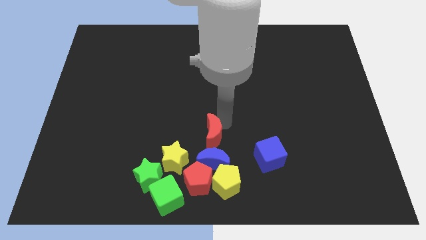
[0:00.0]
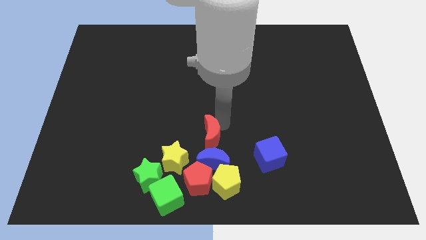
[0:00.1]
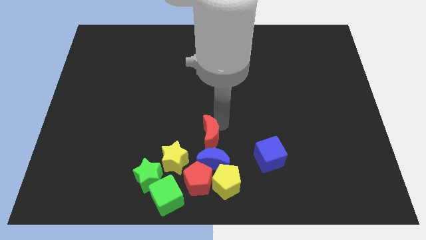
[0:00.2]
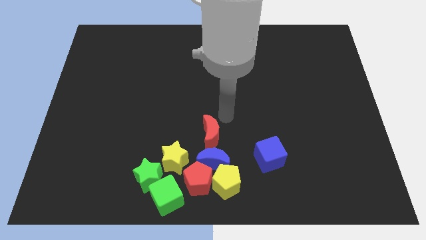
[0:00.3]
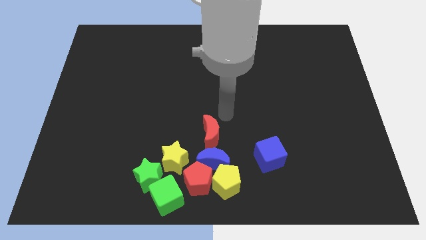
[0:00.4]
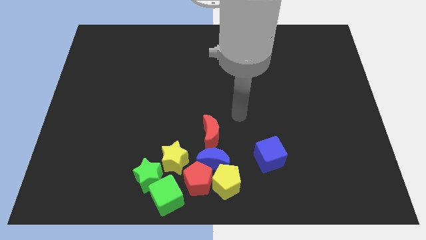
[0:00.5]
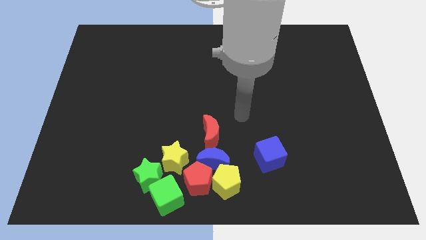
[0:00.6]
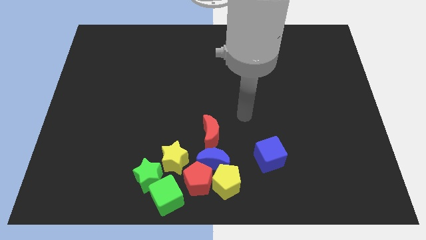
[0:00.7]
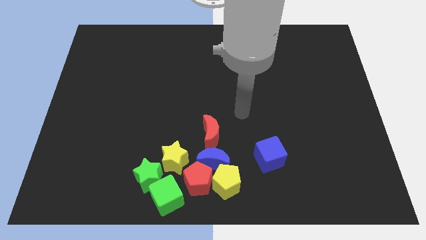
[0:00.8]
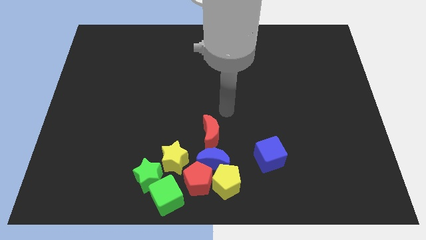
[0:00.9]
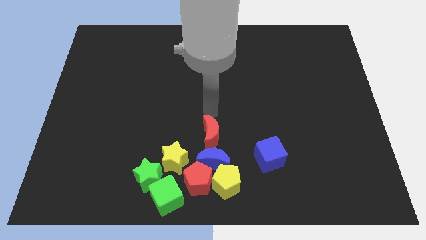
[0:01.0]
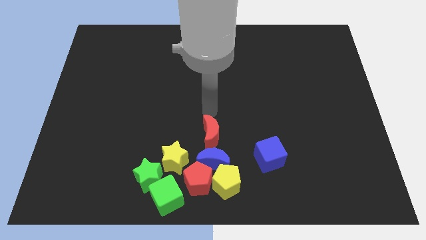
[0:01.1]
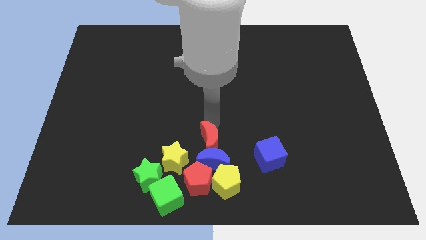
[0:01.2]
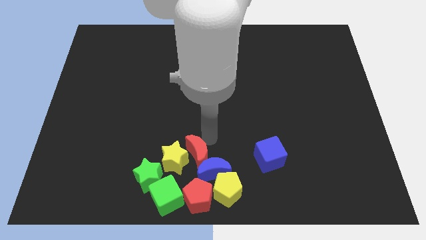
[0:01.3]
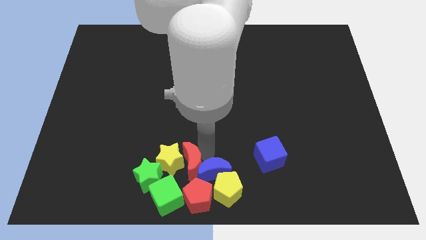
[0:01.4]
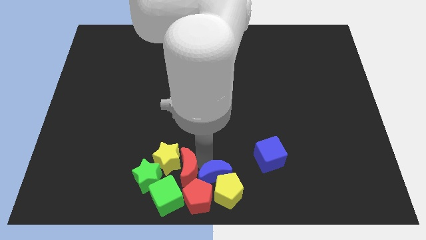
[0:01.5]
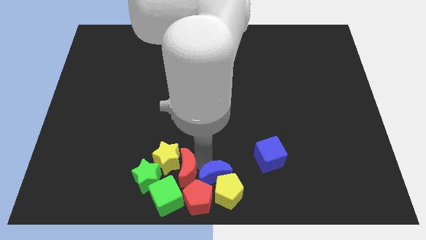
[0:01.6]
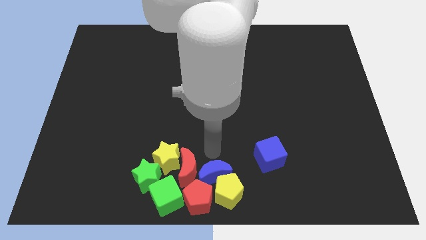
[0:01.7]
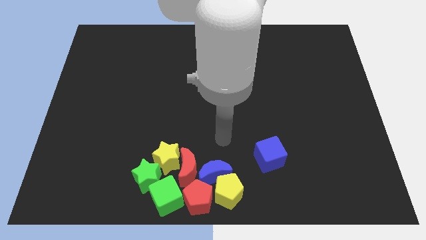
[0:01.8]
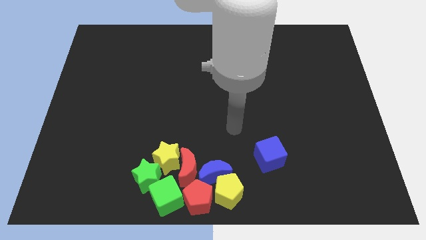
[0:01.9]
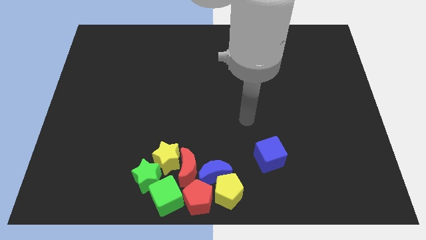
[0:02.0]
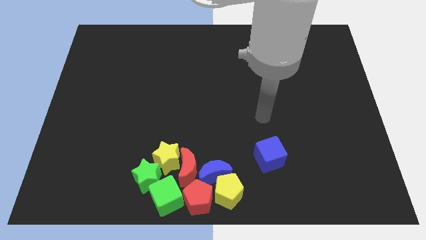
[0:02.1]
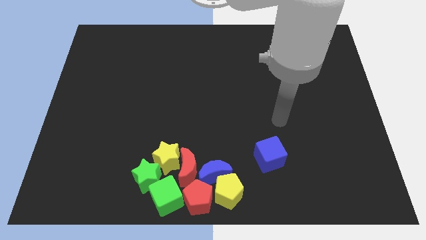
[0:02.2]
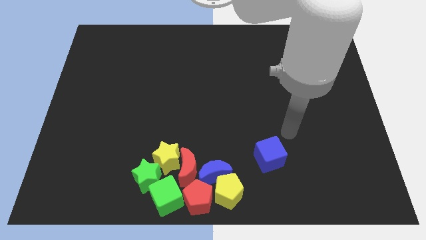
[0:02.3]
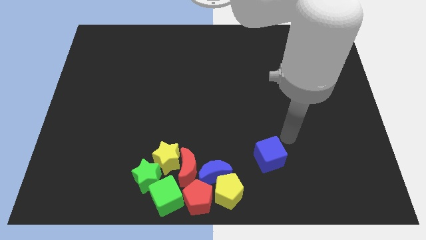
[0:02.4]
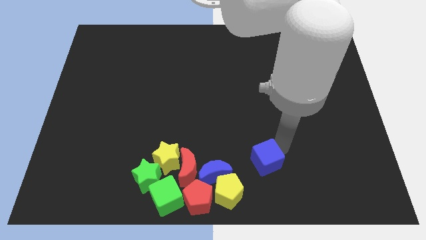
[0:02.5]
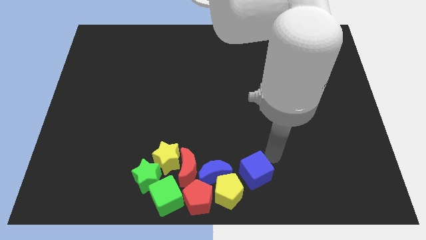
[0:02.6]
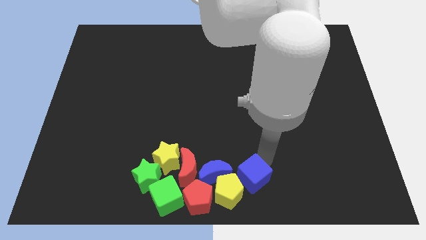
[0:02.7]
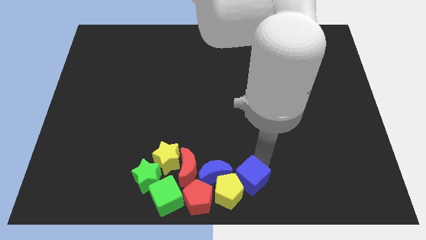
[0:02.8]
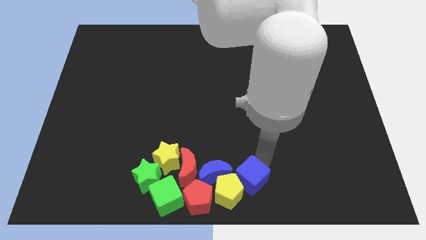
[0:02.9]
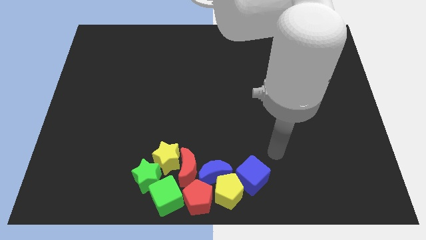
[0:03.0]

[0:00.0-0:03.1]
push the red crescent into green cube

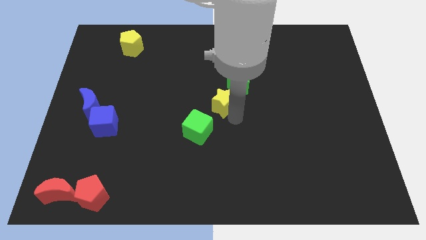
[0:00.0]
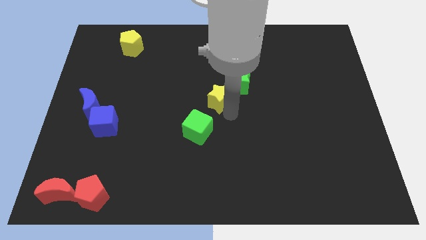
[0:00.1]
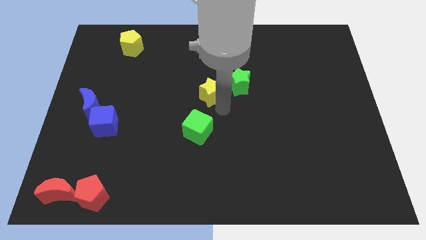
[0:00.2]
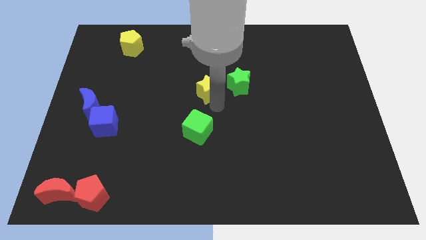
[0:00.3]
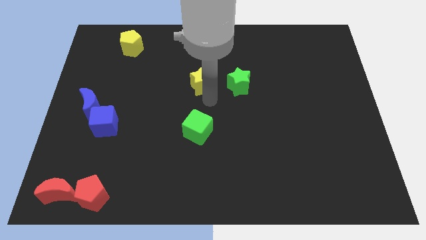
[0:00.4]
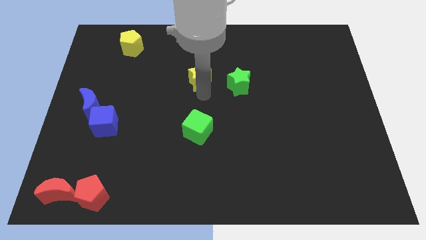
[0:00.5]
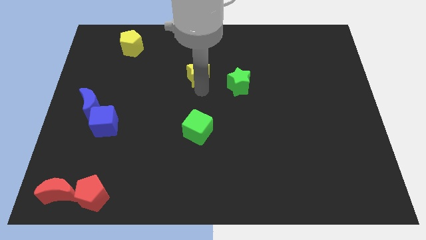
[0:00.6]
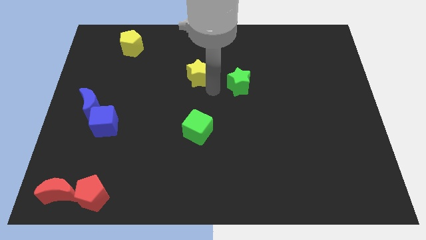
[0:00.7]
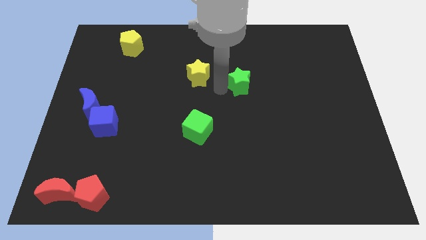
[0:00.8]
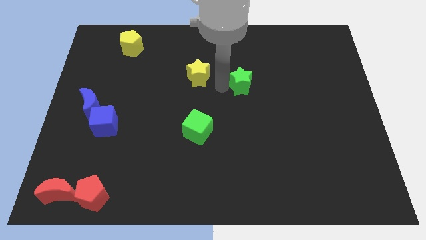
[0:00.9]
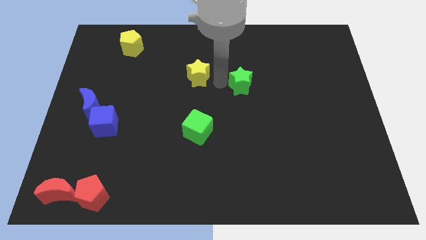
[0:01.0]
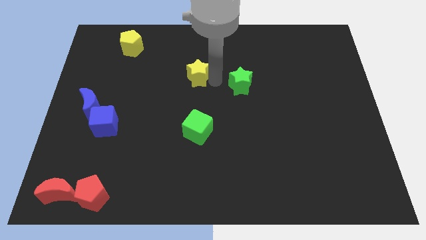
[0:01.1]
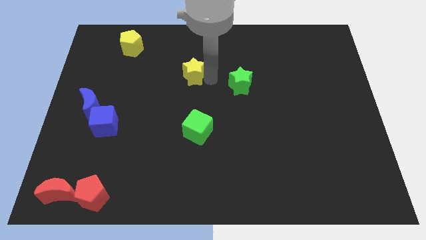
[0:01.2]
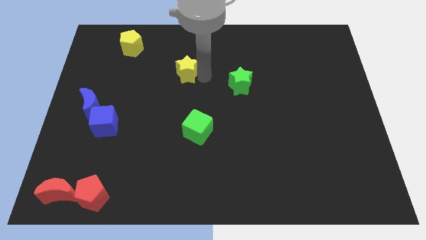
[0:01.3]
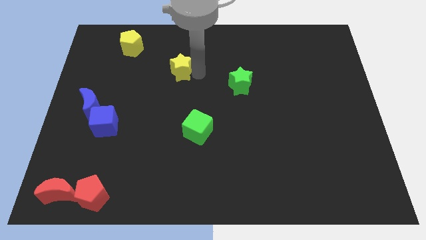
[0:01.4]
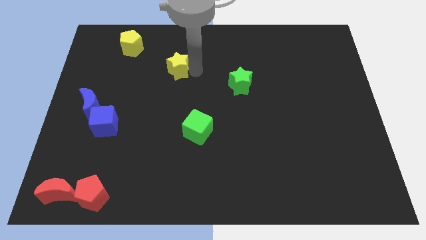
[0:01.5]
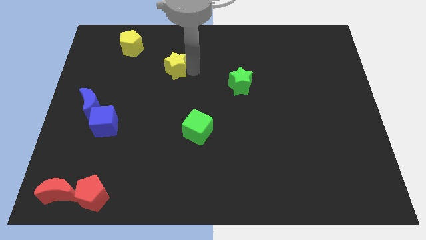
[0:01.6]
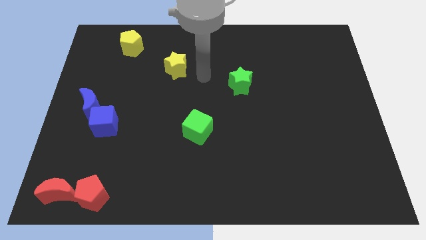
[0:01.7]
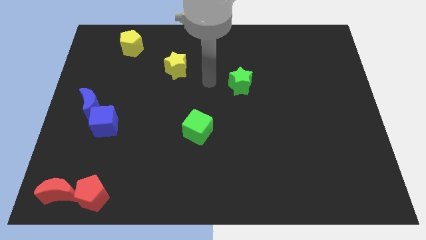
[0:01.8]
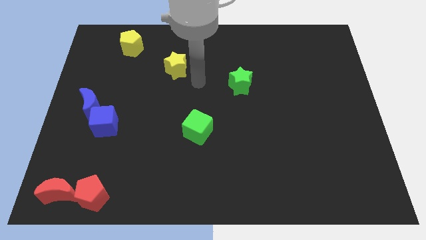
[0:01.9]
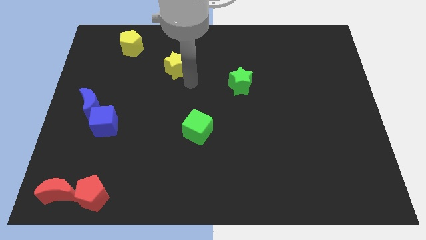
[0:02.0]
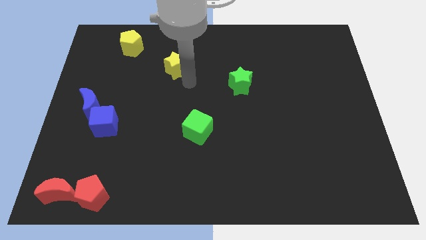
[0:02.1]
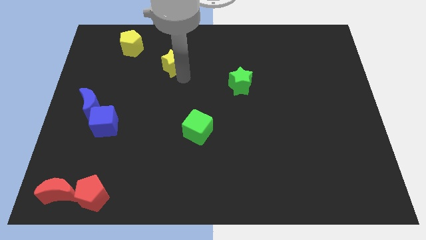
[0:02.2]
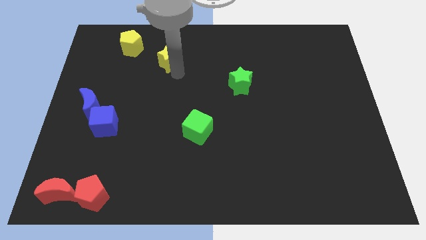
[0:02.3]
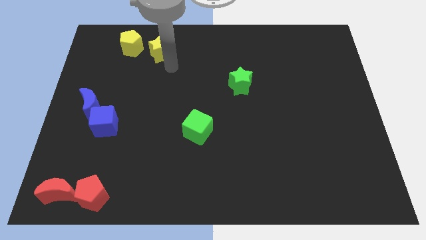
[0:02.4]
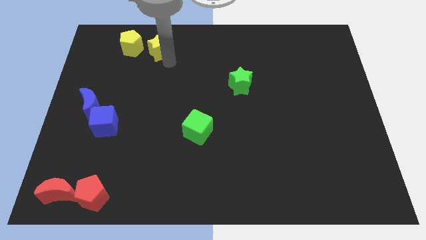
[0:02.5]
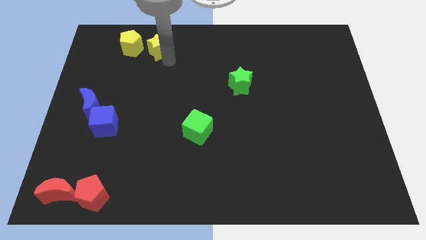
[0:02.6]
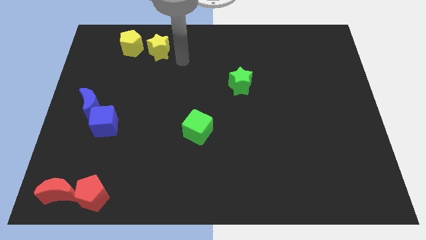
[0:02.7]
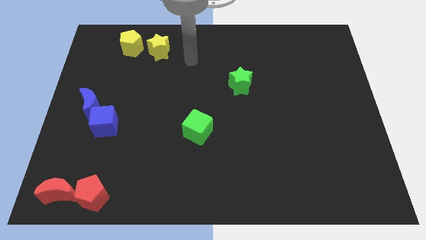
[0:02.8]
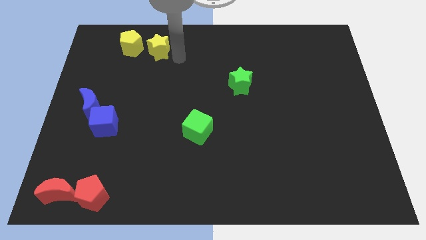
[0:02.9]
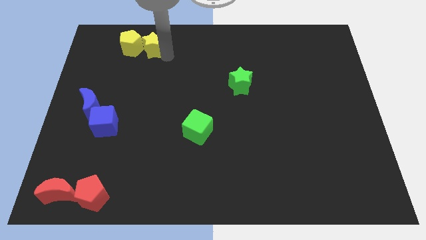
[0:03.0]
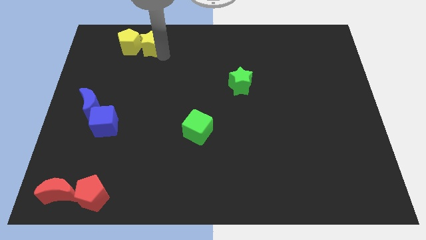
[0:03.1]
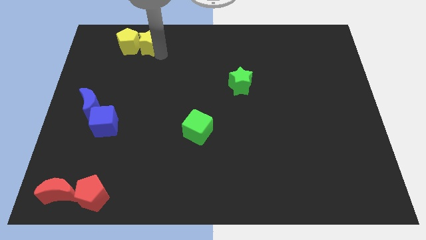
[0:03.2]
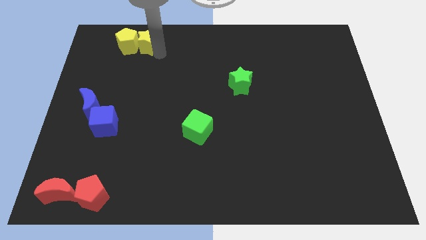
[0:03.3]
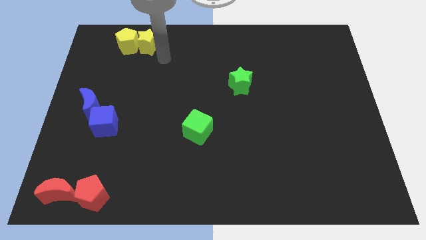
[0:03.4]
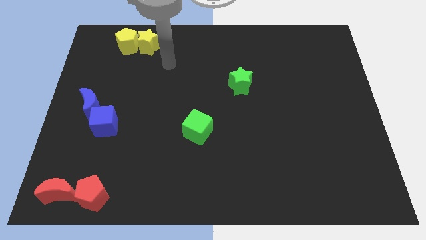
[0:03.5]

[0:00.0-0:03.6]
push the yellow star into the right side of the yellow star

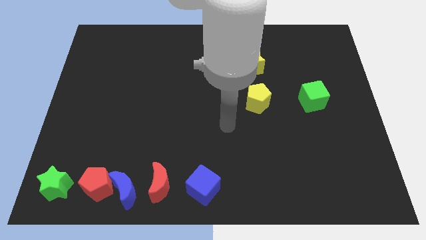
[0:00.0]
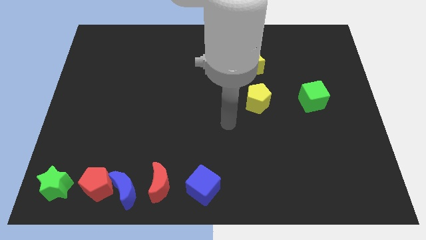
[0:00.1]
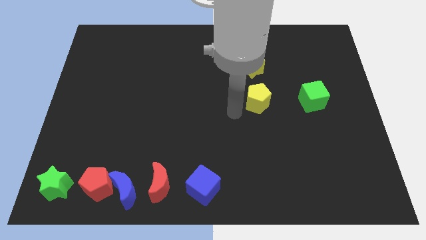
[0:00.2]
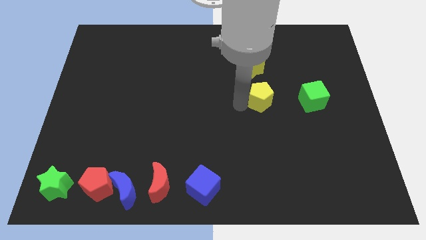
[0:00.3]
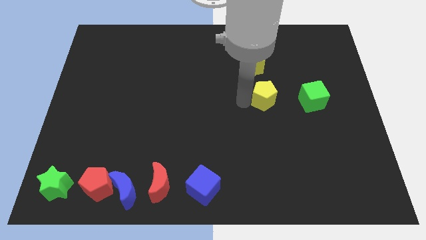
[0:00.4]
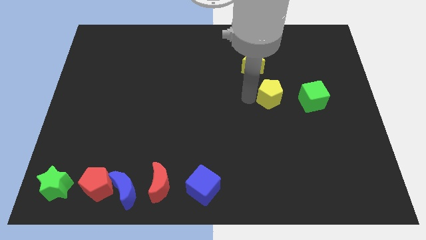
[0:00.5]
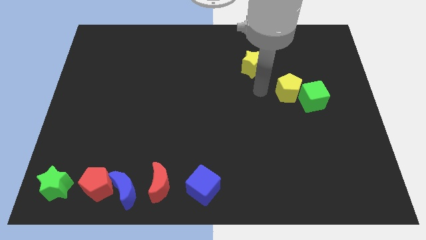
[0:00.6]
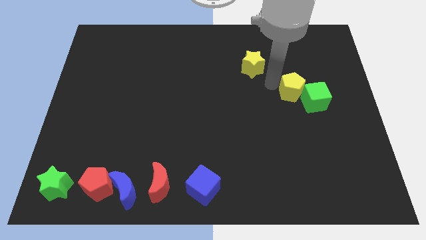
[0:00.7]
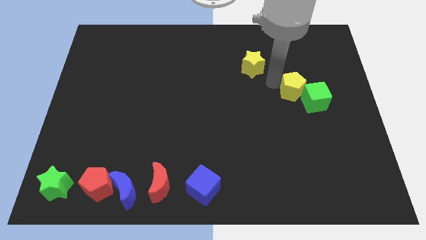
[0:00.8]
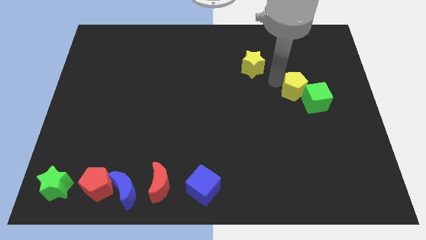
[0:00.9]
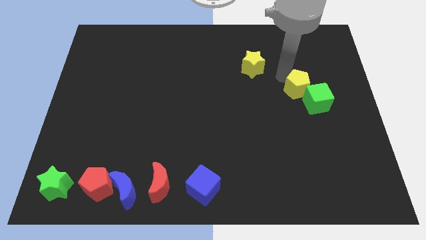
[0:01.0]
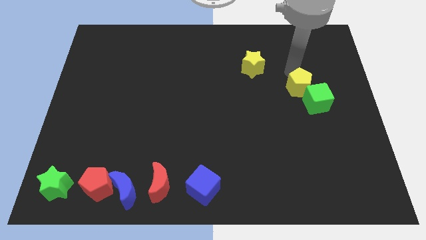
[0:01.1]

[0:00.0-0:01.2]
move the yellow pentagon into the green cube

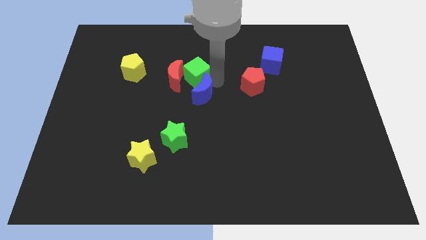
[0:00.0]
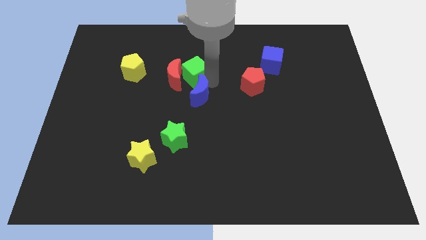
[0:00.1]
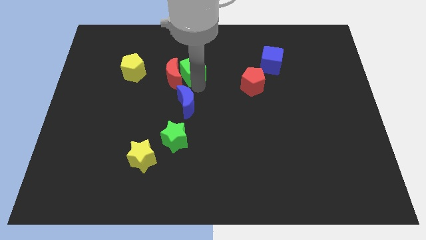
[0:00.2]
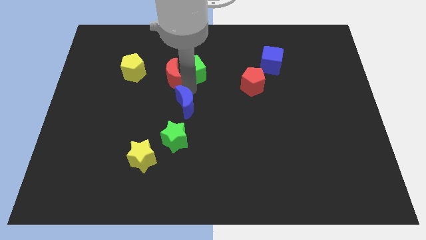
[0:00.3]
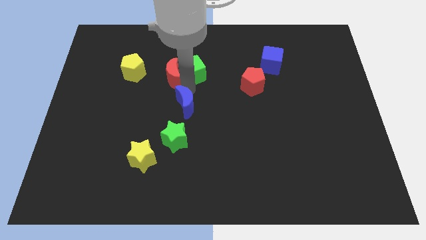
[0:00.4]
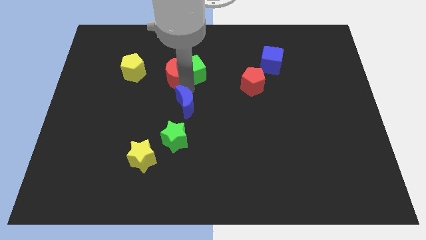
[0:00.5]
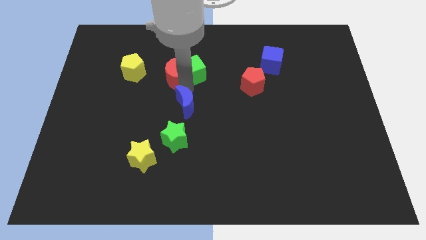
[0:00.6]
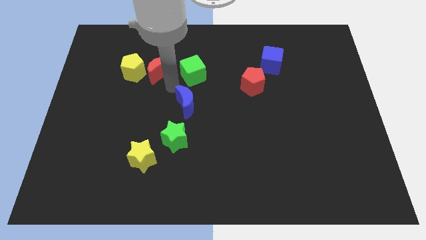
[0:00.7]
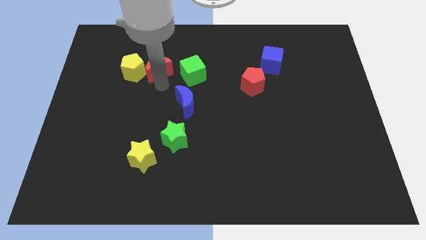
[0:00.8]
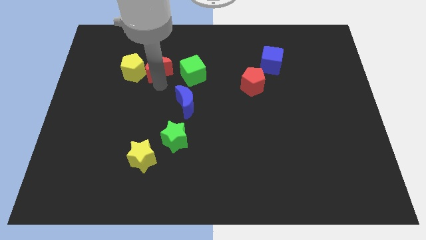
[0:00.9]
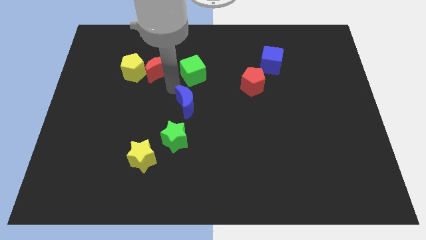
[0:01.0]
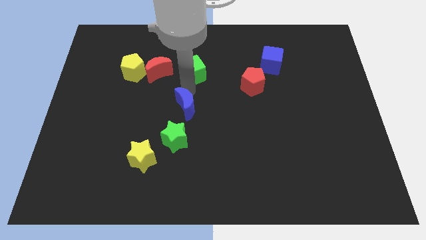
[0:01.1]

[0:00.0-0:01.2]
place the red moon right to the yellow pentagon
